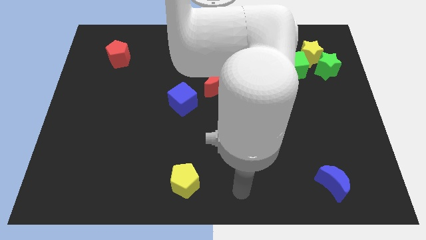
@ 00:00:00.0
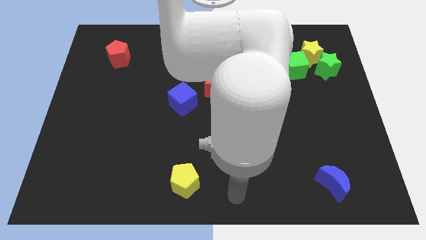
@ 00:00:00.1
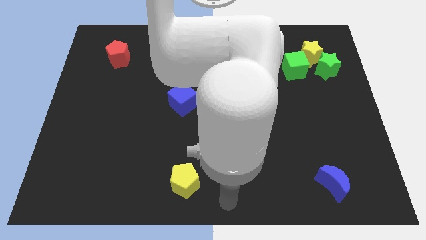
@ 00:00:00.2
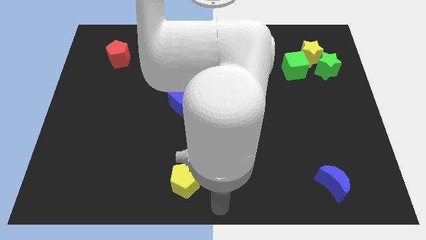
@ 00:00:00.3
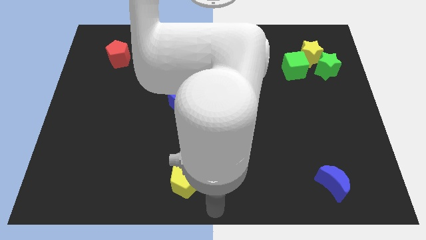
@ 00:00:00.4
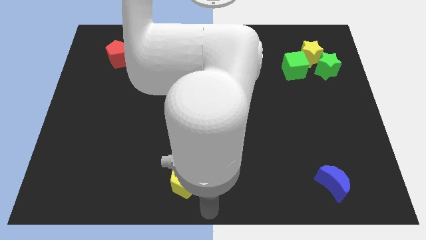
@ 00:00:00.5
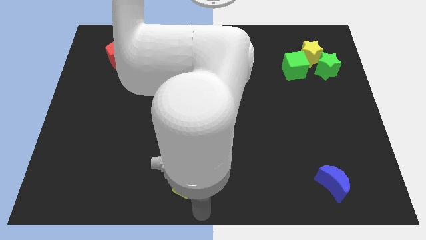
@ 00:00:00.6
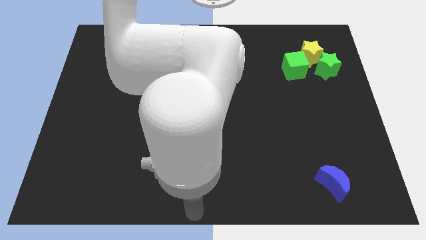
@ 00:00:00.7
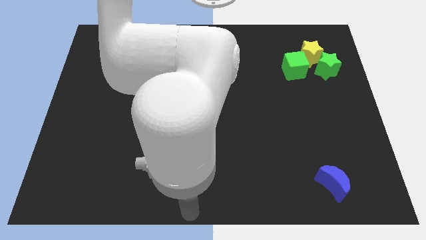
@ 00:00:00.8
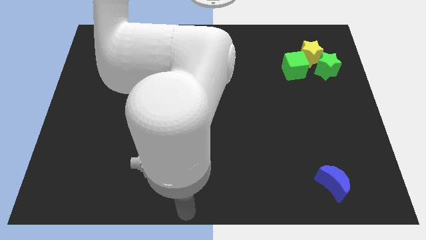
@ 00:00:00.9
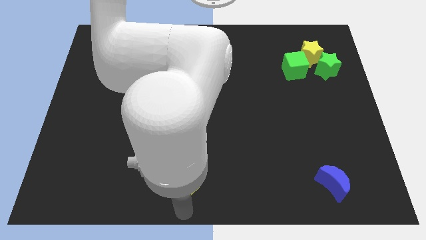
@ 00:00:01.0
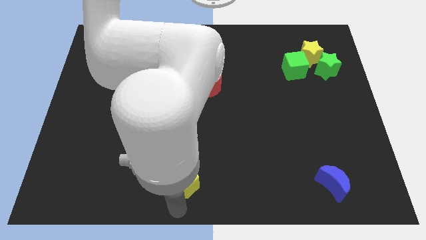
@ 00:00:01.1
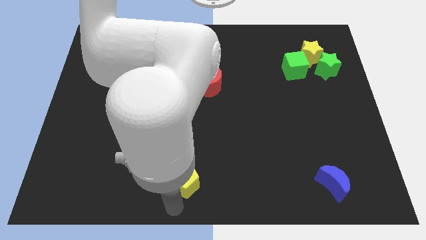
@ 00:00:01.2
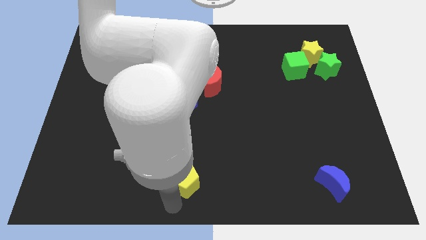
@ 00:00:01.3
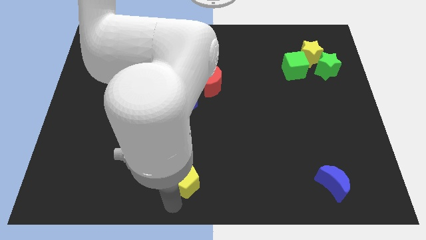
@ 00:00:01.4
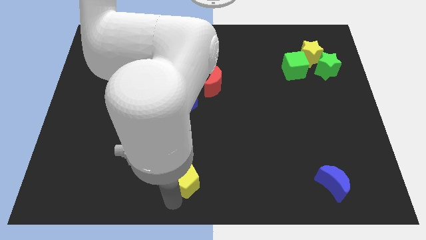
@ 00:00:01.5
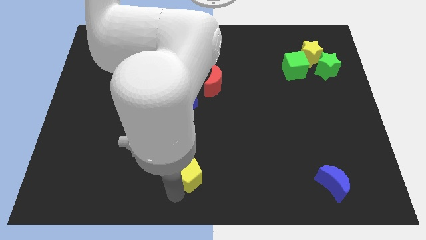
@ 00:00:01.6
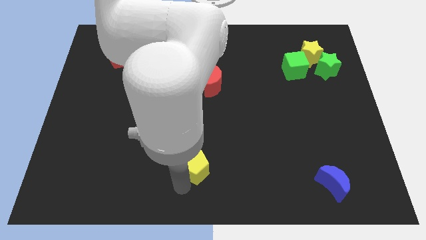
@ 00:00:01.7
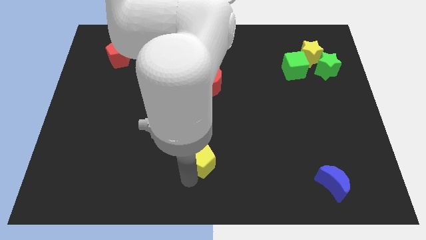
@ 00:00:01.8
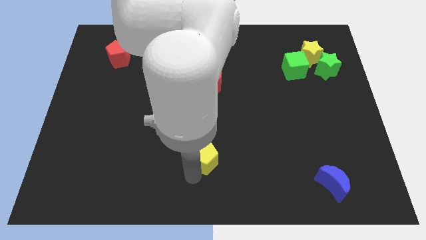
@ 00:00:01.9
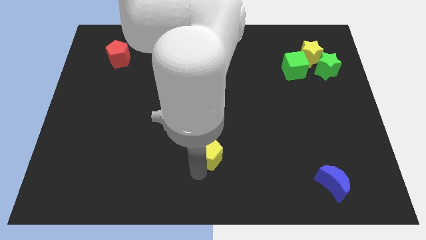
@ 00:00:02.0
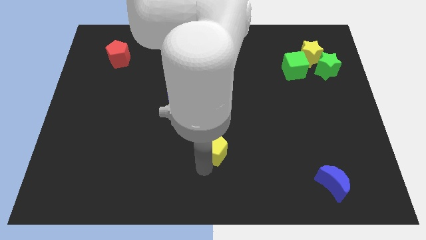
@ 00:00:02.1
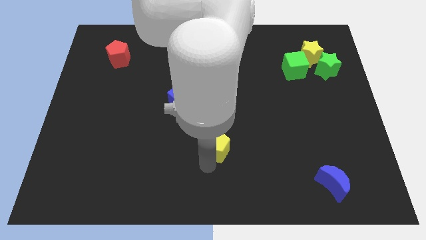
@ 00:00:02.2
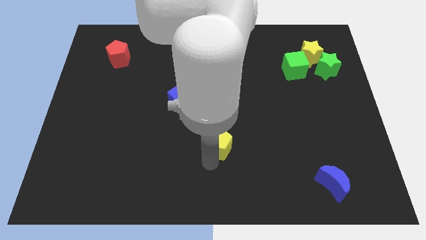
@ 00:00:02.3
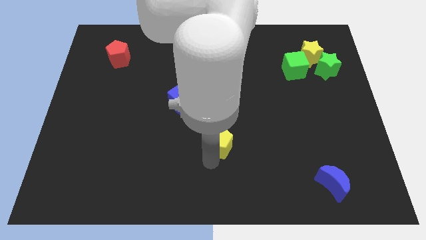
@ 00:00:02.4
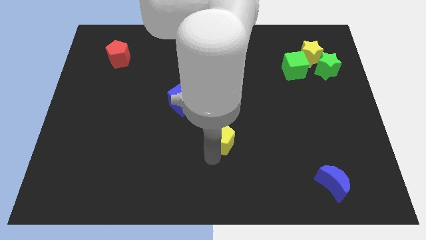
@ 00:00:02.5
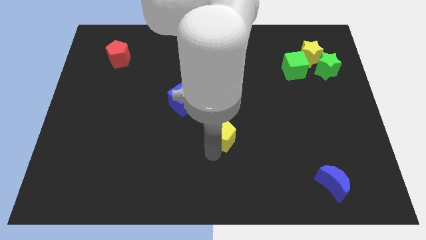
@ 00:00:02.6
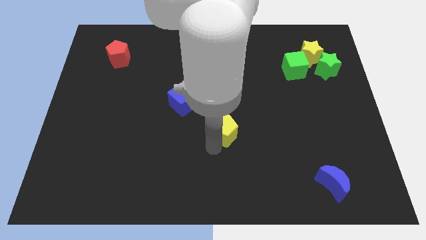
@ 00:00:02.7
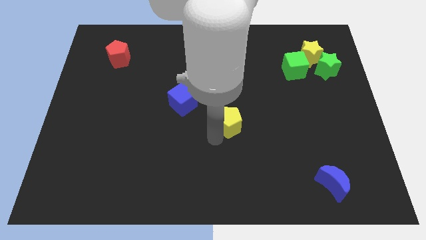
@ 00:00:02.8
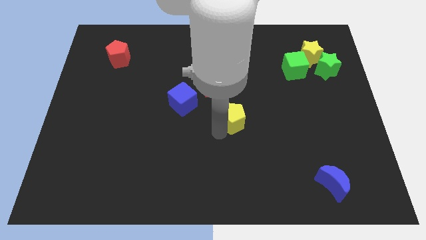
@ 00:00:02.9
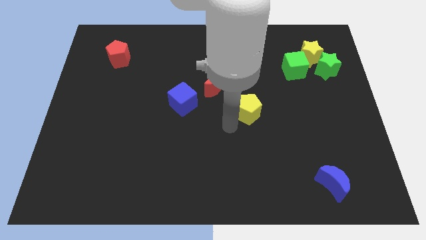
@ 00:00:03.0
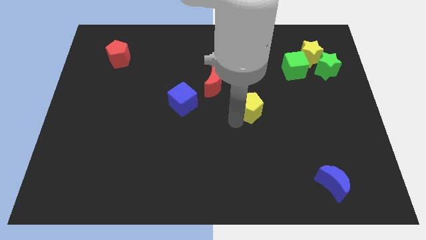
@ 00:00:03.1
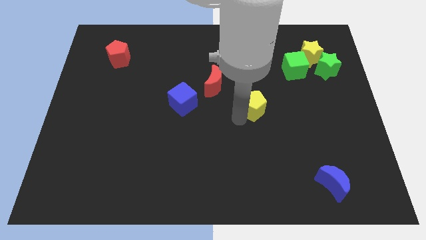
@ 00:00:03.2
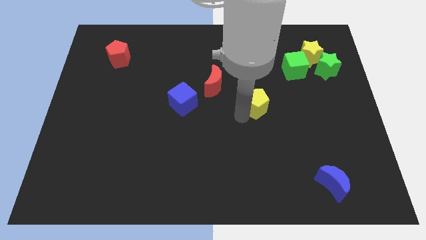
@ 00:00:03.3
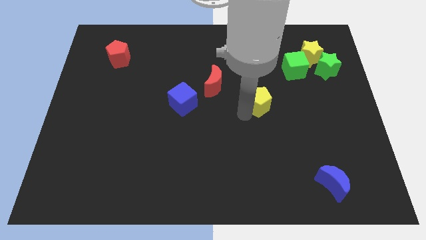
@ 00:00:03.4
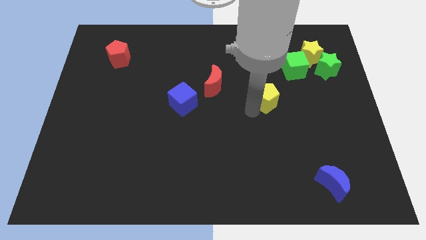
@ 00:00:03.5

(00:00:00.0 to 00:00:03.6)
move yellow pentagon towards green cube

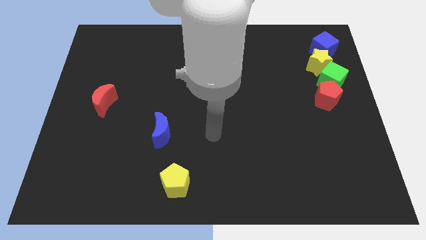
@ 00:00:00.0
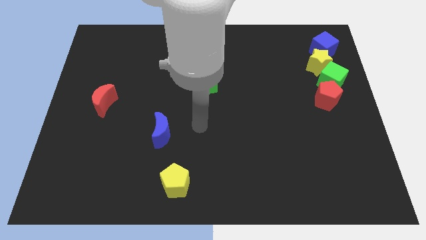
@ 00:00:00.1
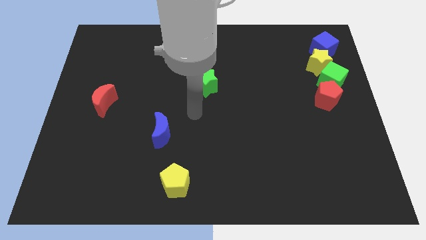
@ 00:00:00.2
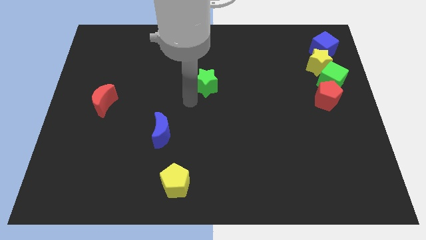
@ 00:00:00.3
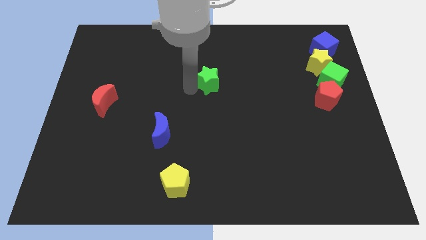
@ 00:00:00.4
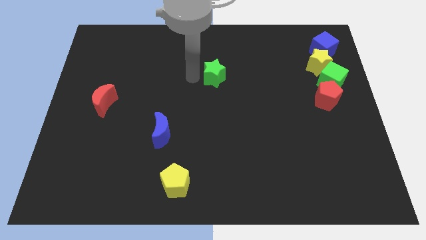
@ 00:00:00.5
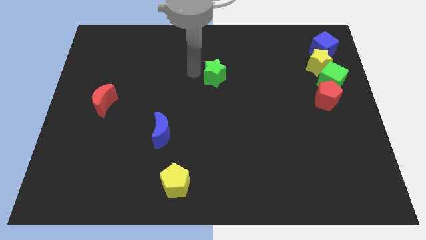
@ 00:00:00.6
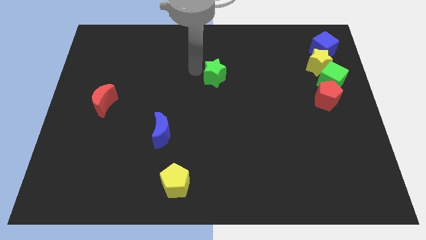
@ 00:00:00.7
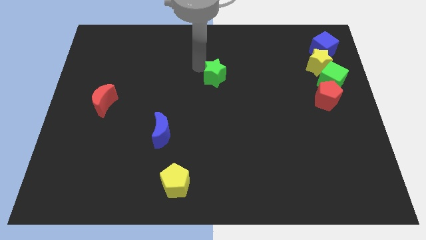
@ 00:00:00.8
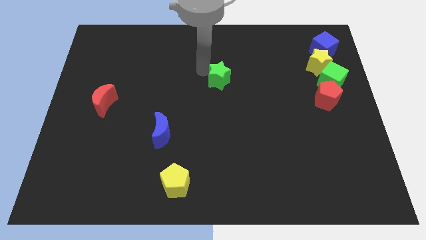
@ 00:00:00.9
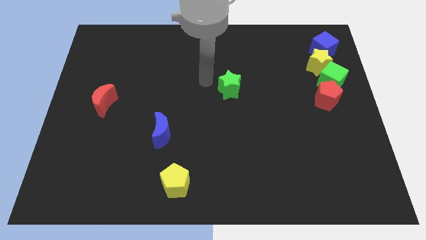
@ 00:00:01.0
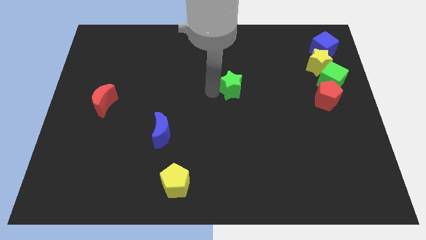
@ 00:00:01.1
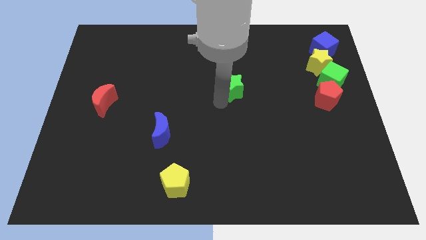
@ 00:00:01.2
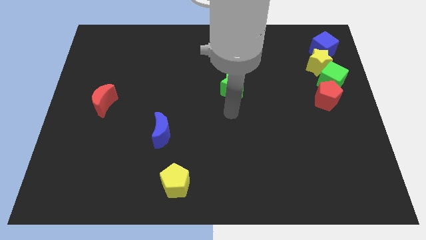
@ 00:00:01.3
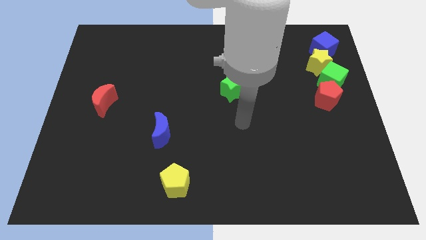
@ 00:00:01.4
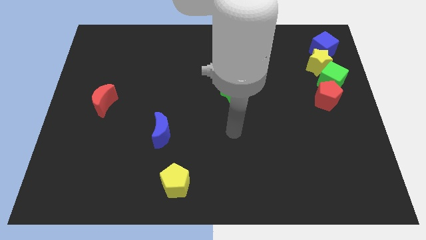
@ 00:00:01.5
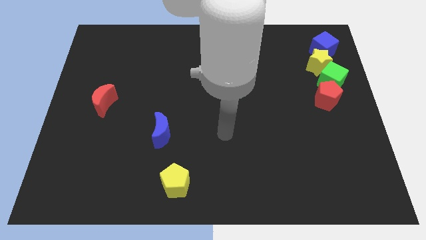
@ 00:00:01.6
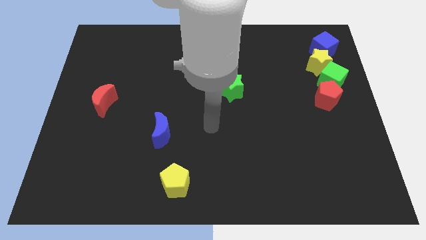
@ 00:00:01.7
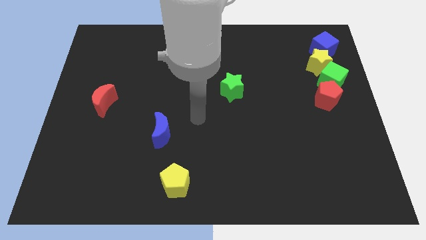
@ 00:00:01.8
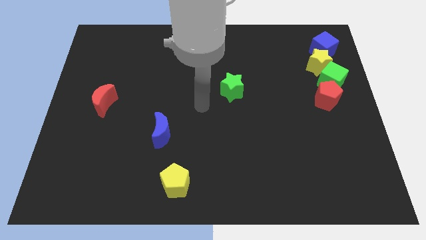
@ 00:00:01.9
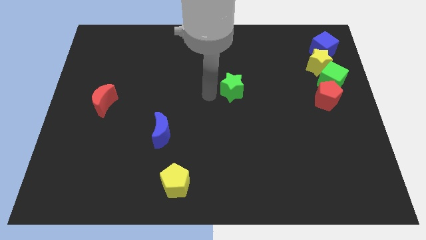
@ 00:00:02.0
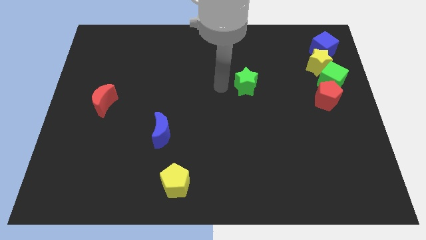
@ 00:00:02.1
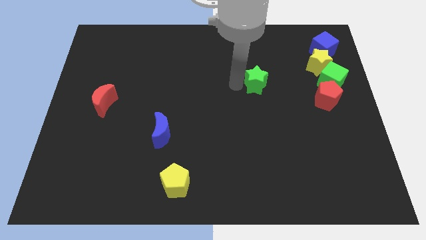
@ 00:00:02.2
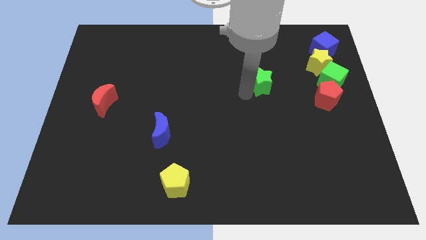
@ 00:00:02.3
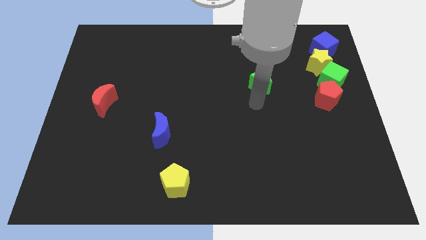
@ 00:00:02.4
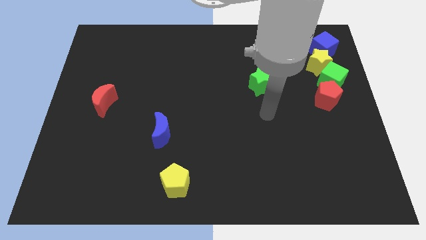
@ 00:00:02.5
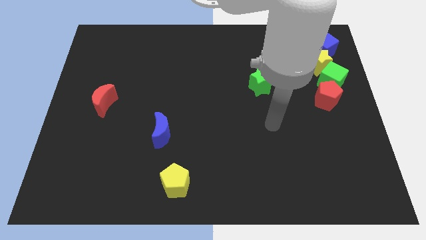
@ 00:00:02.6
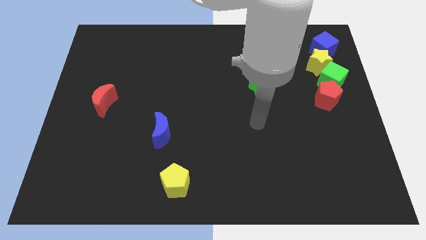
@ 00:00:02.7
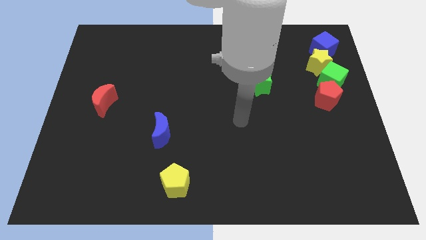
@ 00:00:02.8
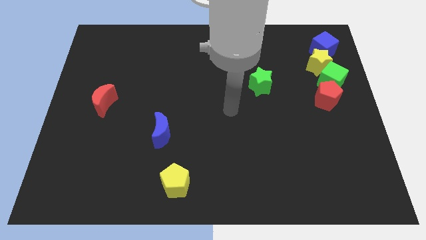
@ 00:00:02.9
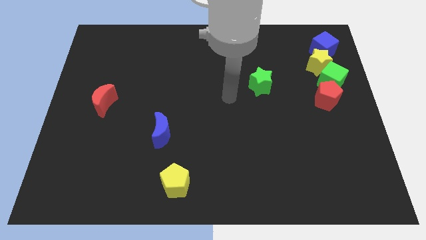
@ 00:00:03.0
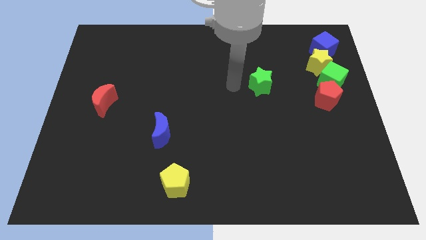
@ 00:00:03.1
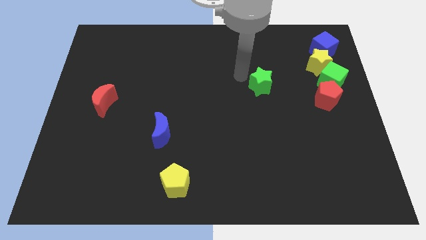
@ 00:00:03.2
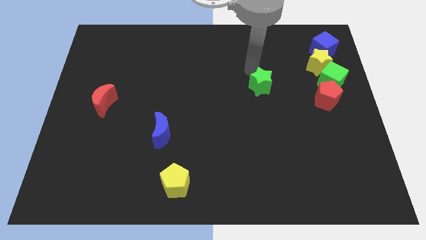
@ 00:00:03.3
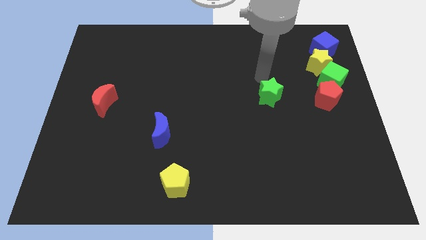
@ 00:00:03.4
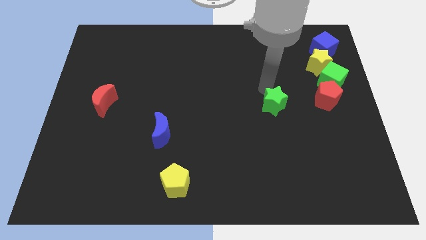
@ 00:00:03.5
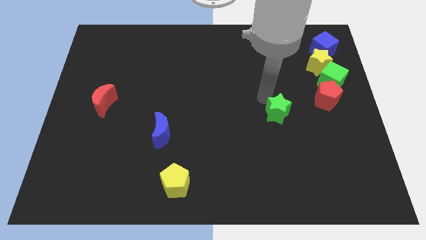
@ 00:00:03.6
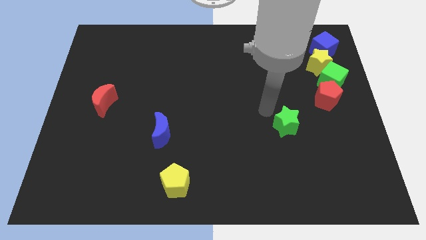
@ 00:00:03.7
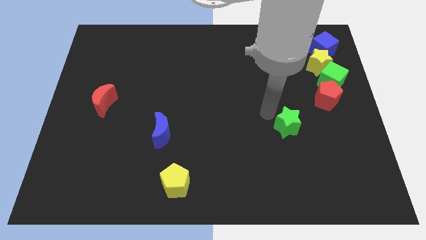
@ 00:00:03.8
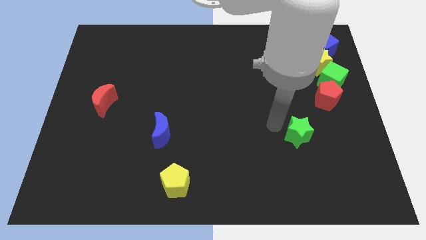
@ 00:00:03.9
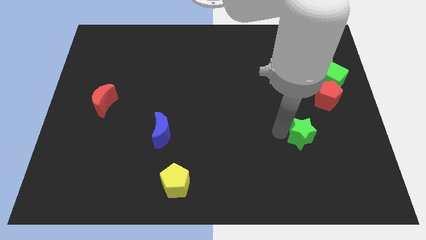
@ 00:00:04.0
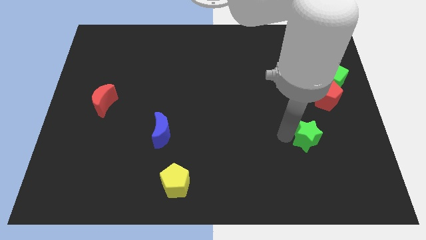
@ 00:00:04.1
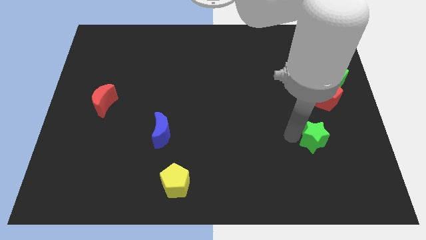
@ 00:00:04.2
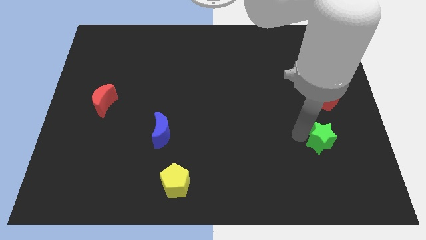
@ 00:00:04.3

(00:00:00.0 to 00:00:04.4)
place the green star below the red pentagon

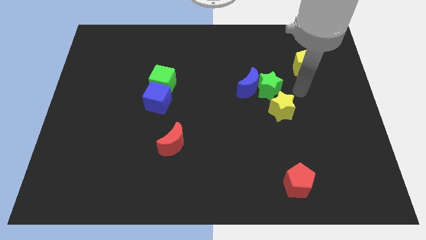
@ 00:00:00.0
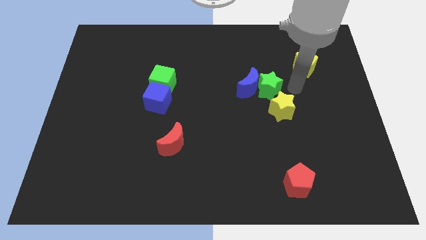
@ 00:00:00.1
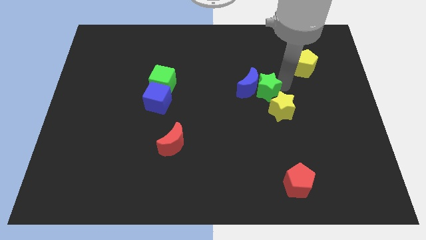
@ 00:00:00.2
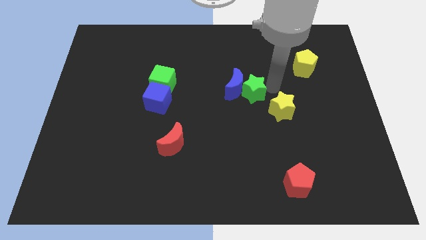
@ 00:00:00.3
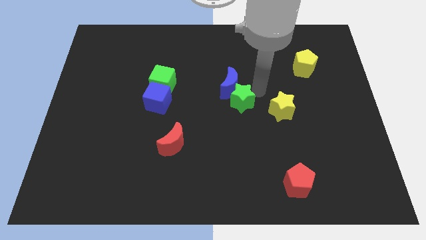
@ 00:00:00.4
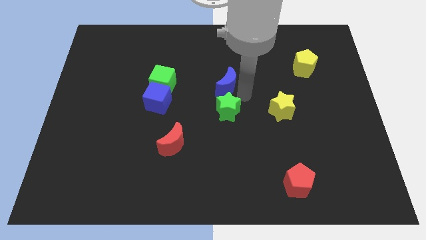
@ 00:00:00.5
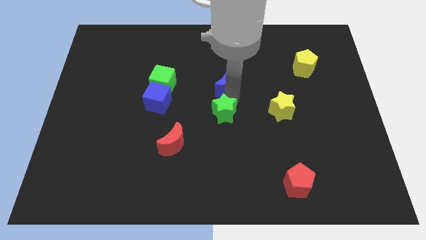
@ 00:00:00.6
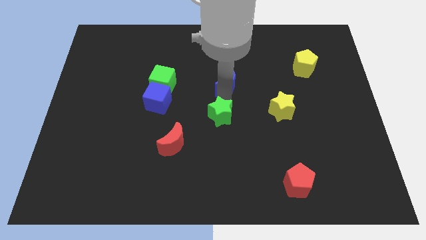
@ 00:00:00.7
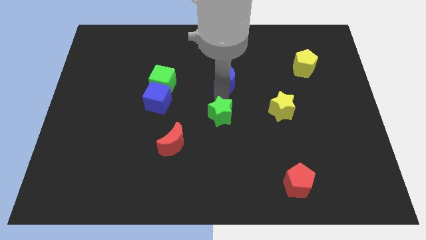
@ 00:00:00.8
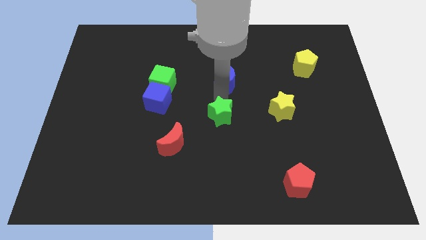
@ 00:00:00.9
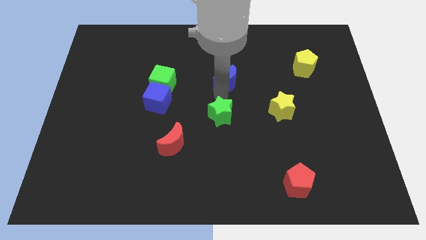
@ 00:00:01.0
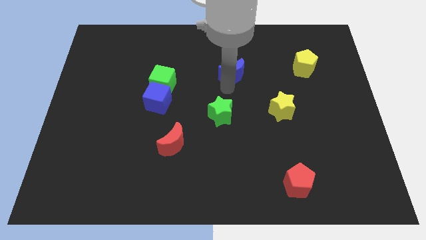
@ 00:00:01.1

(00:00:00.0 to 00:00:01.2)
put the green star at the center of the board
